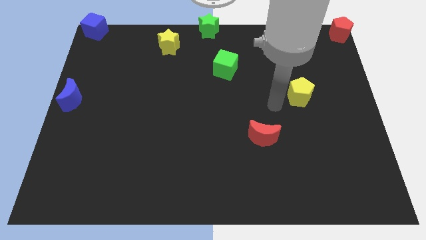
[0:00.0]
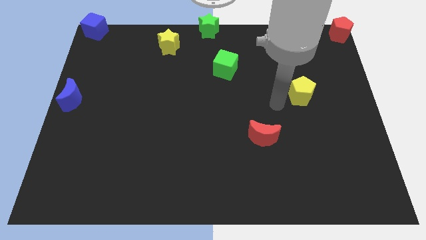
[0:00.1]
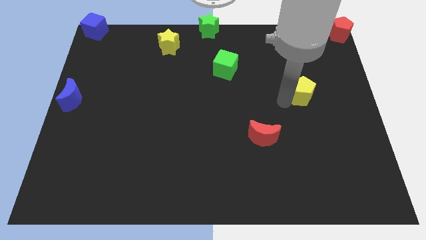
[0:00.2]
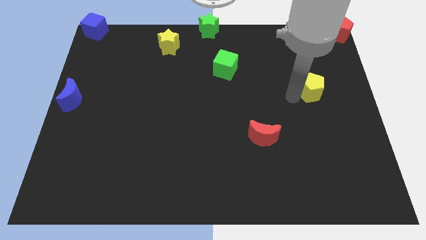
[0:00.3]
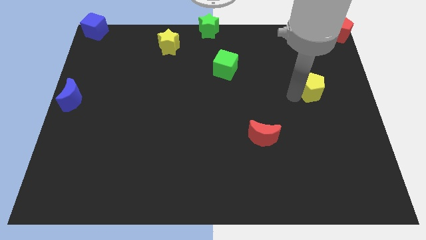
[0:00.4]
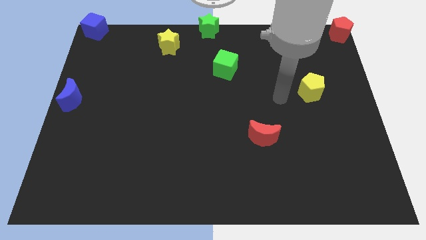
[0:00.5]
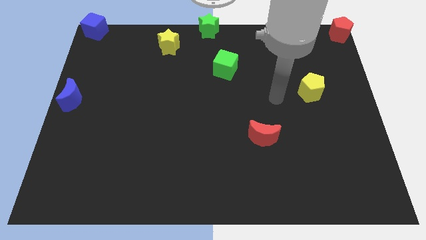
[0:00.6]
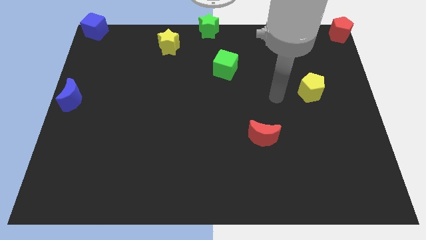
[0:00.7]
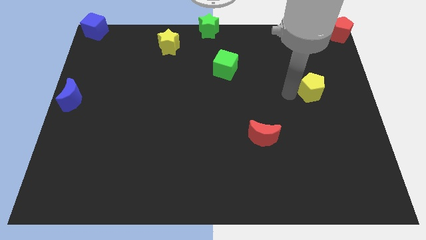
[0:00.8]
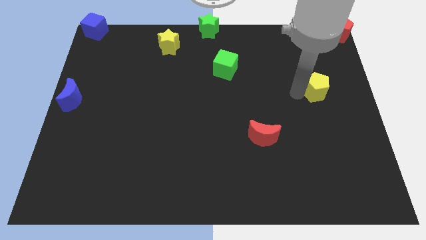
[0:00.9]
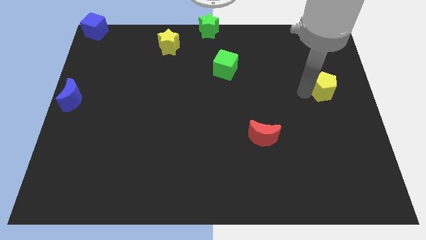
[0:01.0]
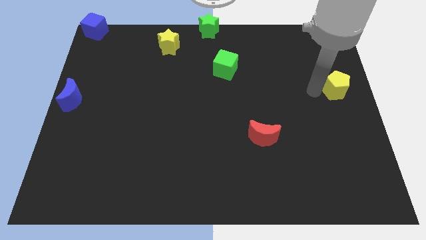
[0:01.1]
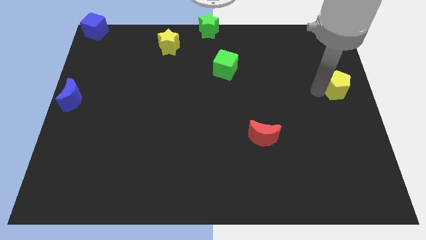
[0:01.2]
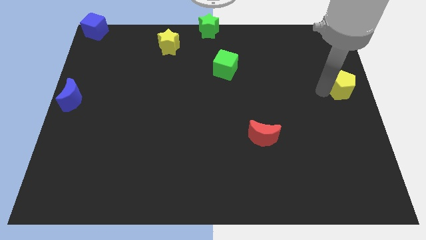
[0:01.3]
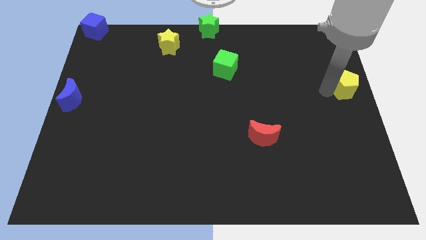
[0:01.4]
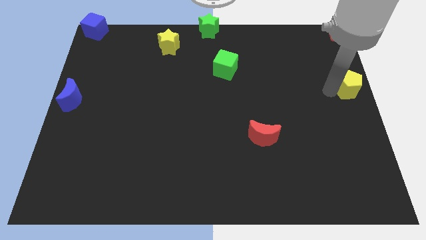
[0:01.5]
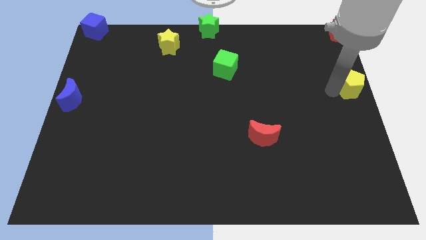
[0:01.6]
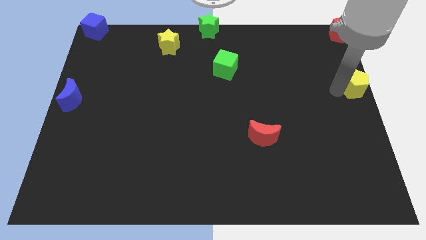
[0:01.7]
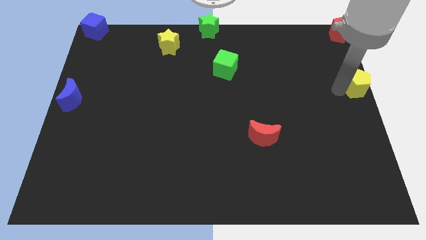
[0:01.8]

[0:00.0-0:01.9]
push the yellow pentagon to the right center corner of the board

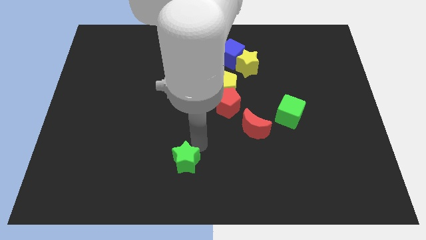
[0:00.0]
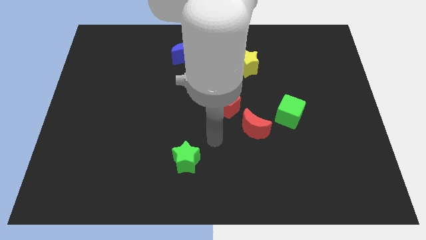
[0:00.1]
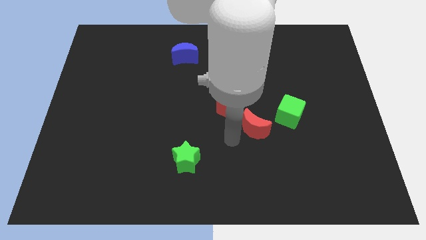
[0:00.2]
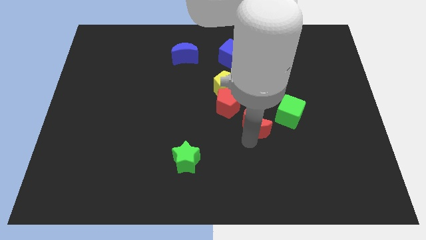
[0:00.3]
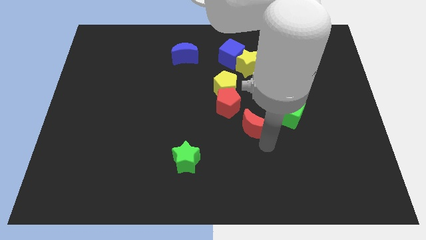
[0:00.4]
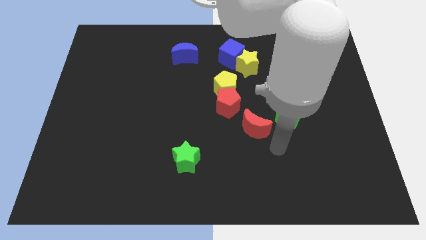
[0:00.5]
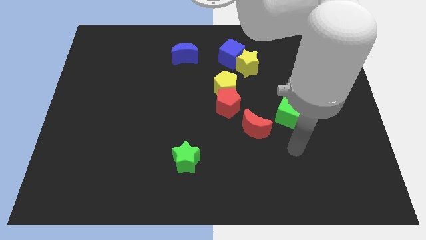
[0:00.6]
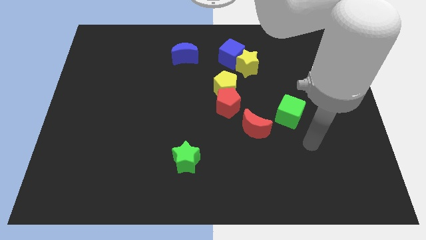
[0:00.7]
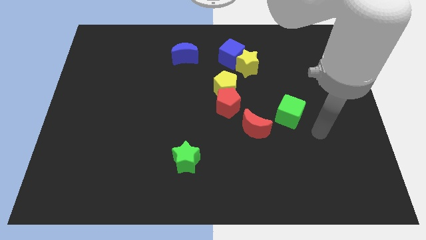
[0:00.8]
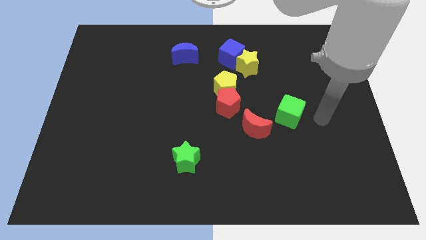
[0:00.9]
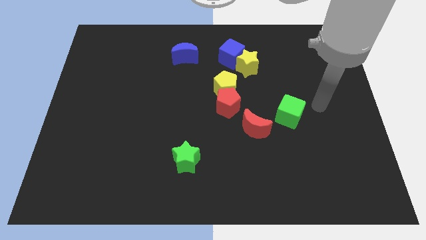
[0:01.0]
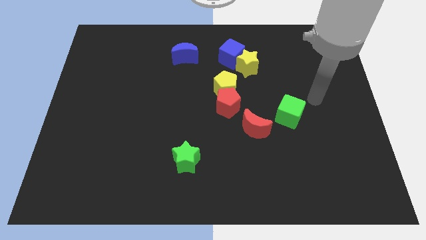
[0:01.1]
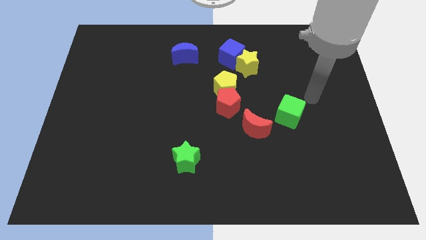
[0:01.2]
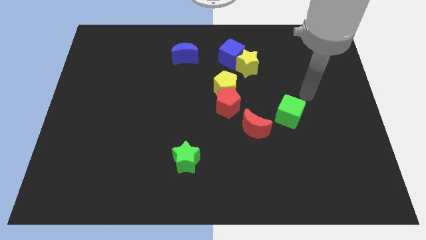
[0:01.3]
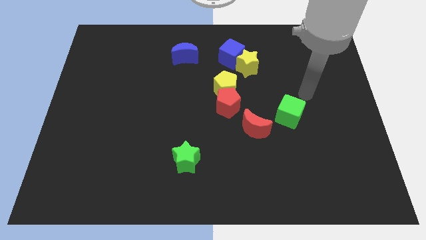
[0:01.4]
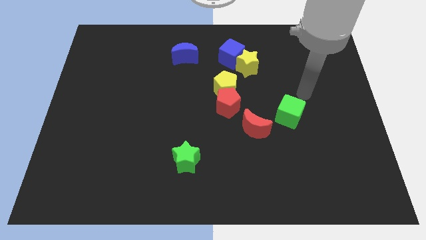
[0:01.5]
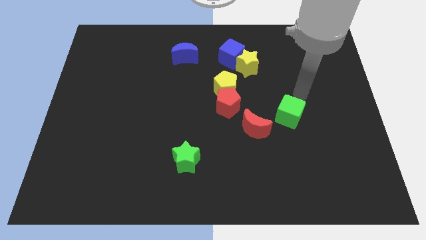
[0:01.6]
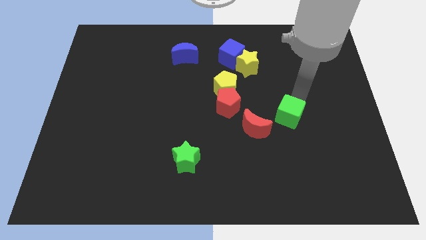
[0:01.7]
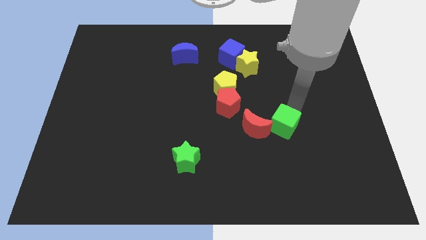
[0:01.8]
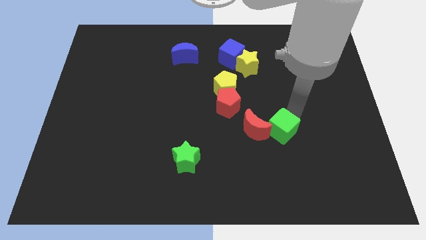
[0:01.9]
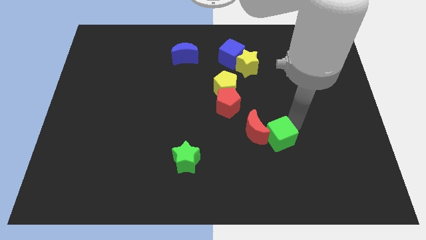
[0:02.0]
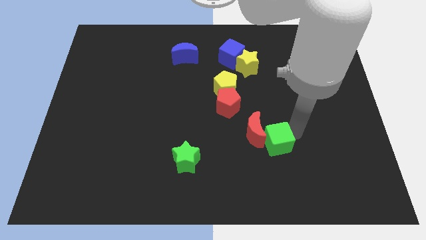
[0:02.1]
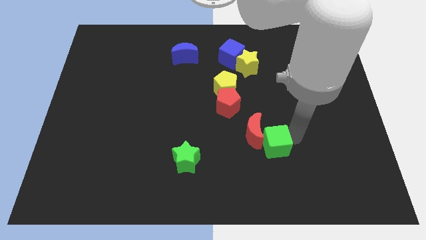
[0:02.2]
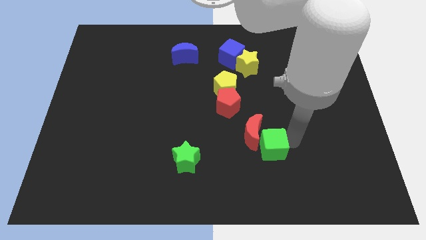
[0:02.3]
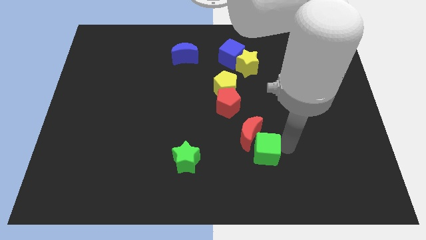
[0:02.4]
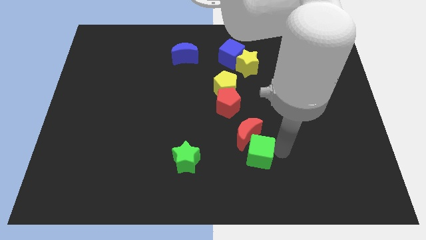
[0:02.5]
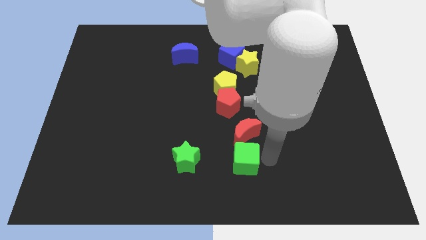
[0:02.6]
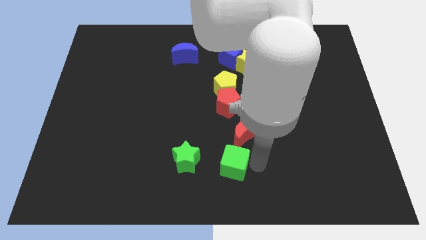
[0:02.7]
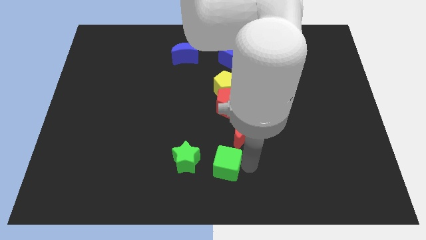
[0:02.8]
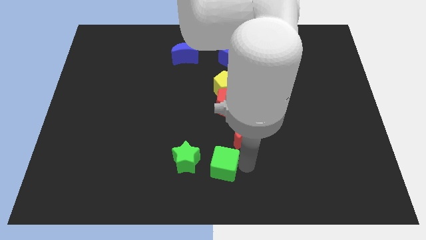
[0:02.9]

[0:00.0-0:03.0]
move the green cube to the right of the green star

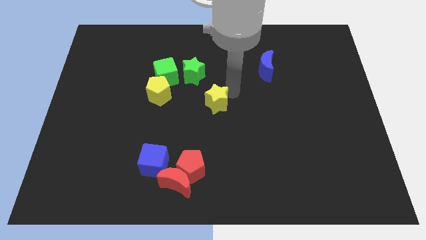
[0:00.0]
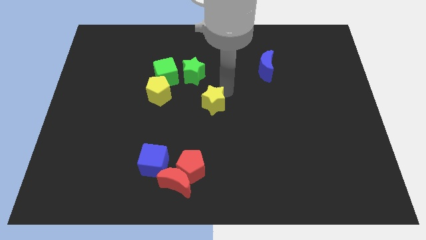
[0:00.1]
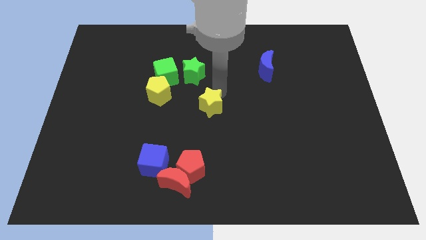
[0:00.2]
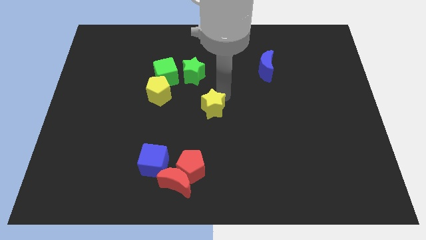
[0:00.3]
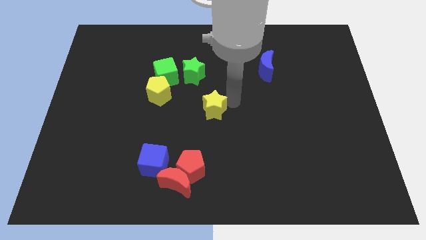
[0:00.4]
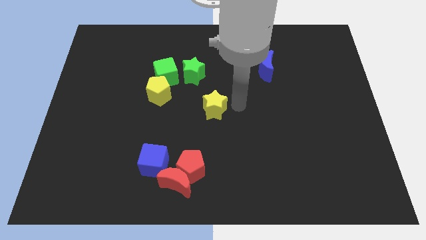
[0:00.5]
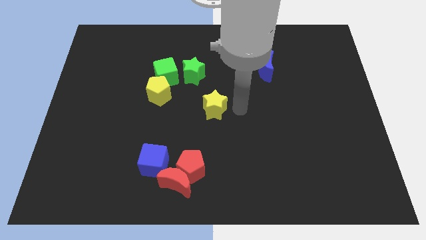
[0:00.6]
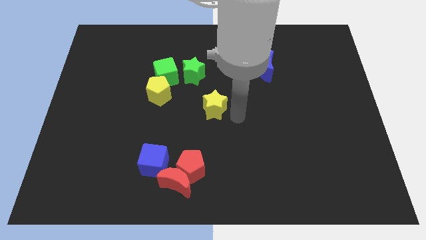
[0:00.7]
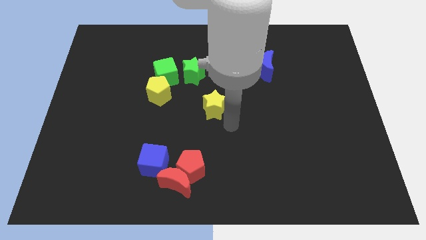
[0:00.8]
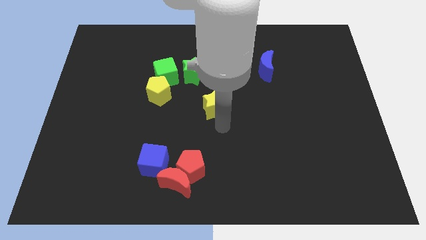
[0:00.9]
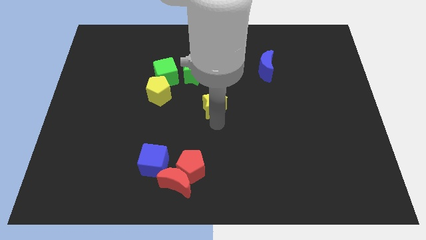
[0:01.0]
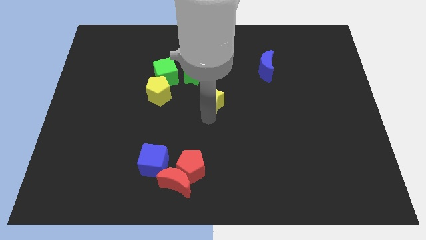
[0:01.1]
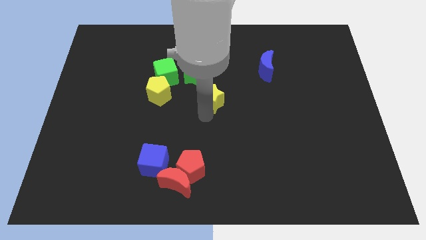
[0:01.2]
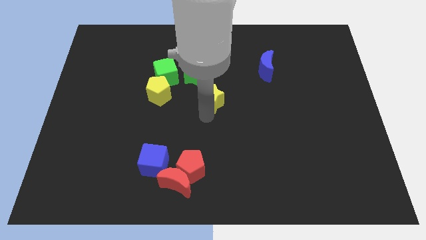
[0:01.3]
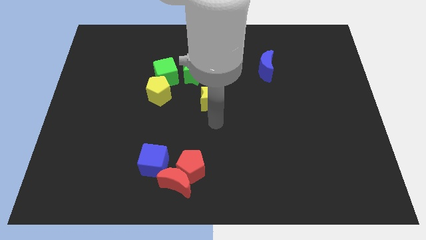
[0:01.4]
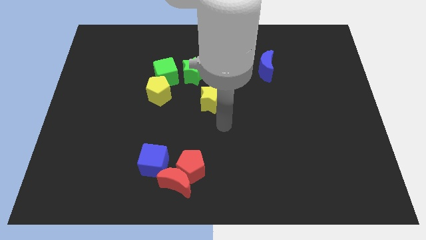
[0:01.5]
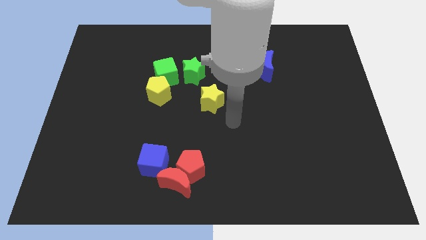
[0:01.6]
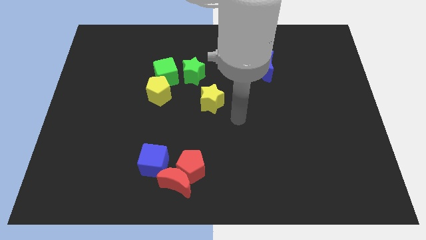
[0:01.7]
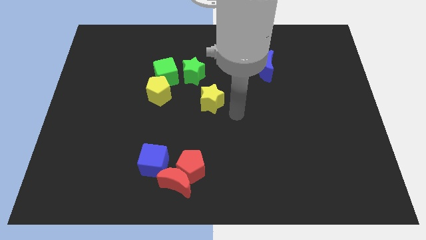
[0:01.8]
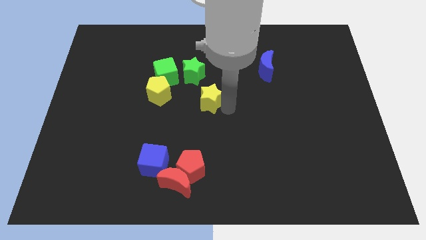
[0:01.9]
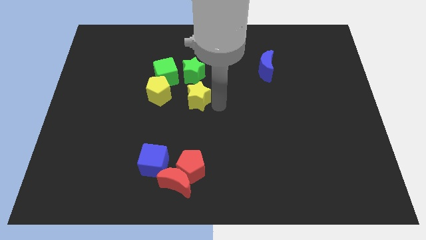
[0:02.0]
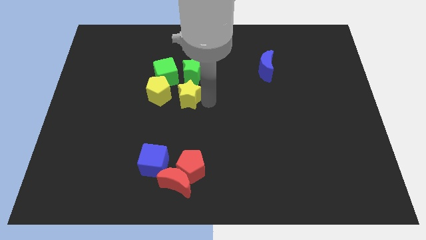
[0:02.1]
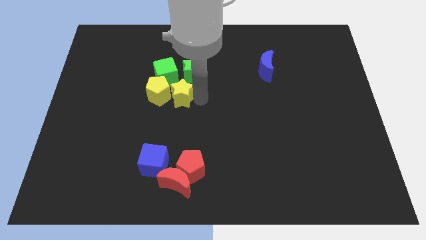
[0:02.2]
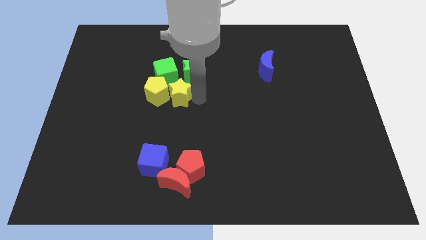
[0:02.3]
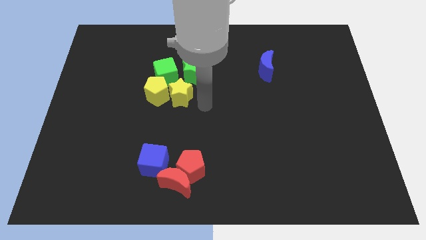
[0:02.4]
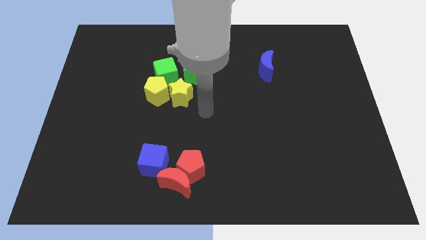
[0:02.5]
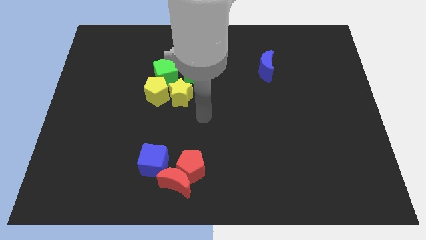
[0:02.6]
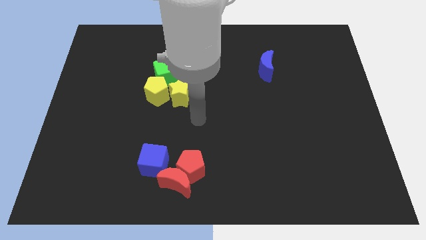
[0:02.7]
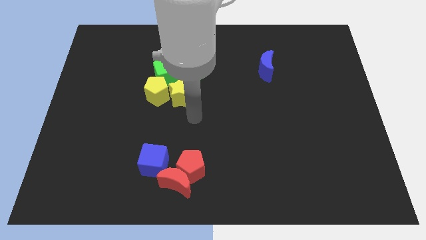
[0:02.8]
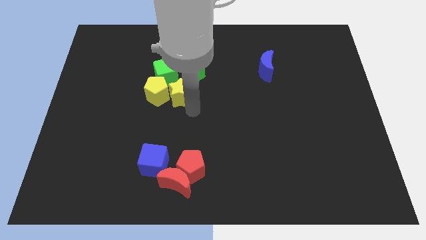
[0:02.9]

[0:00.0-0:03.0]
move yellow star right beside the yellow pentagon

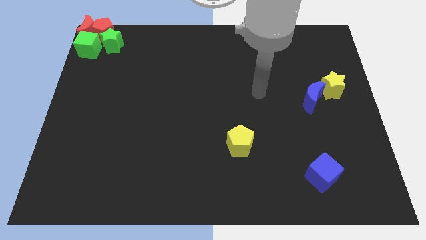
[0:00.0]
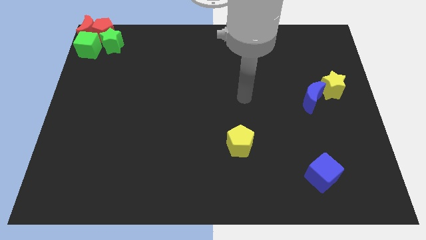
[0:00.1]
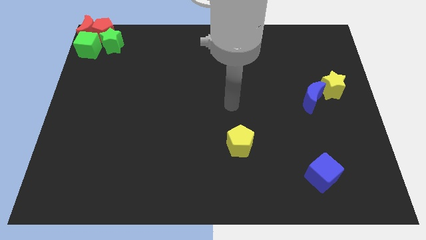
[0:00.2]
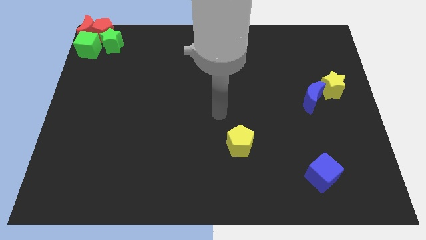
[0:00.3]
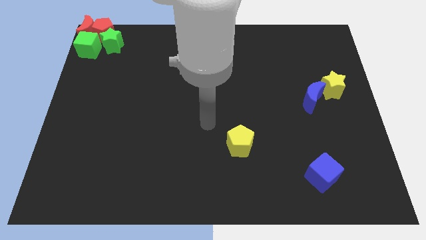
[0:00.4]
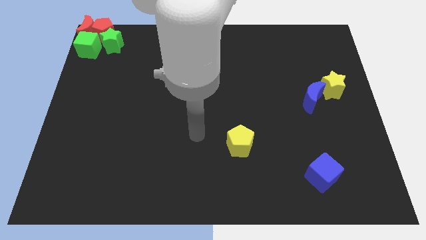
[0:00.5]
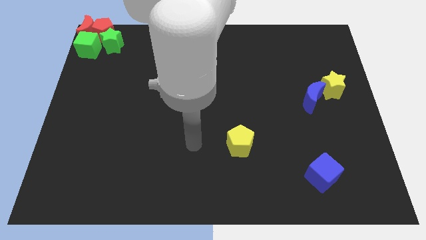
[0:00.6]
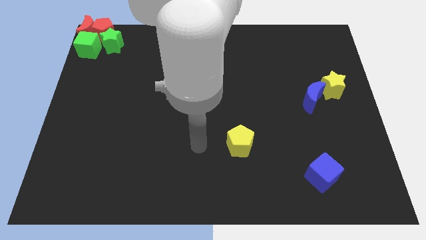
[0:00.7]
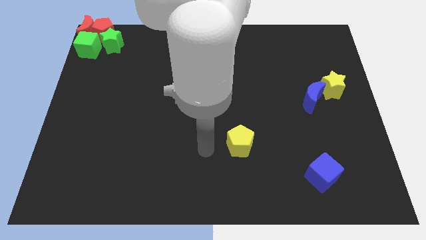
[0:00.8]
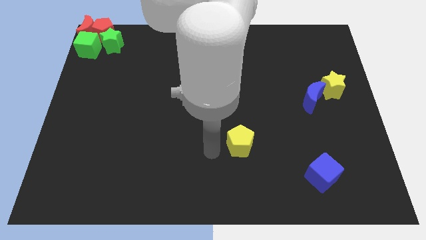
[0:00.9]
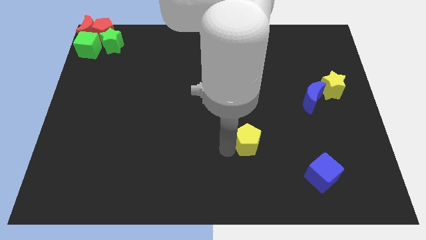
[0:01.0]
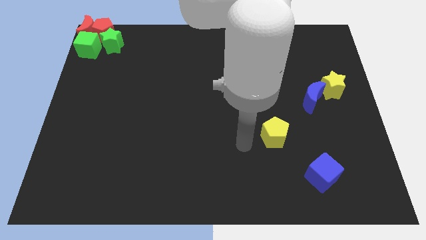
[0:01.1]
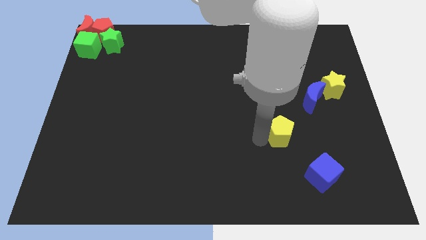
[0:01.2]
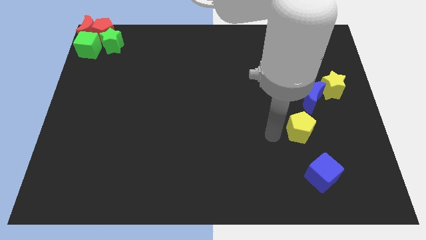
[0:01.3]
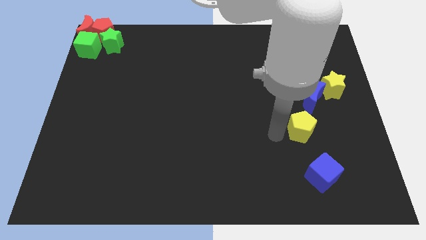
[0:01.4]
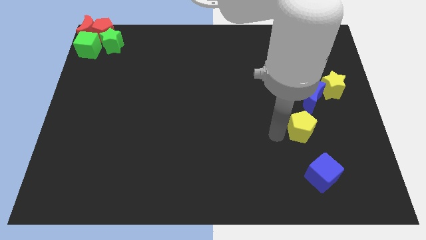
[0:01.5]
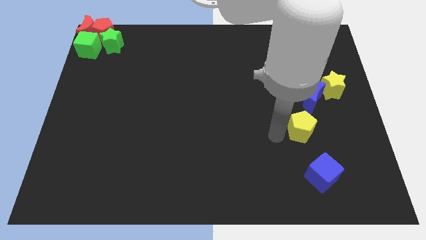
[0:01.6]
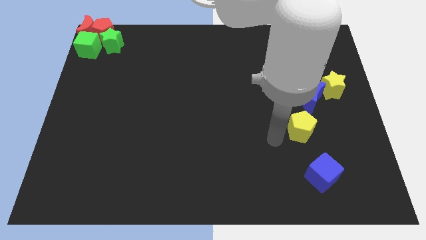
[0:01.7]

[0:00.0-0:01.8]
push the yellow pentagon into the blue crescent
